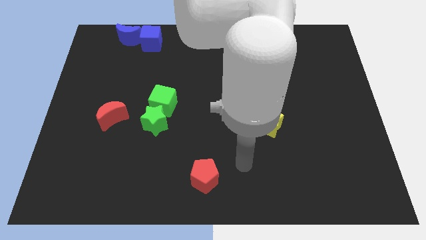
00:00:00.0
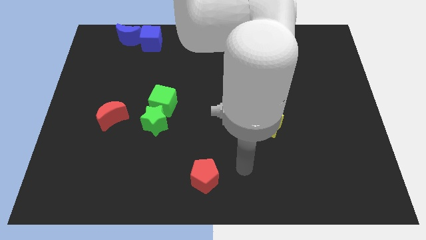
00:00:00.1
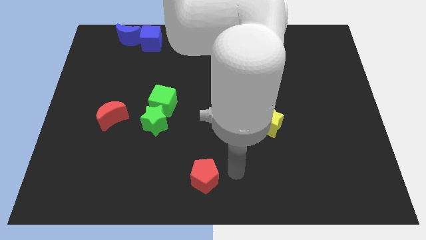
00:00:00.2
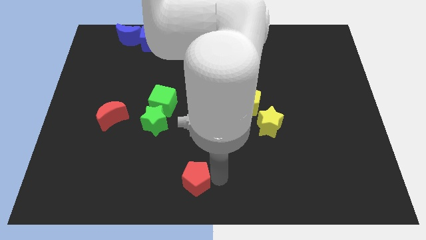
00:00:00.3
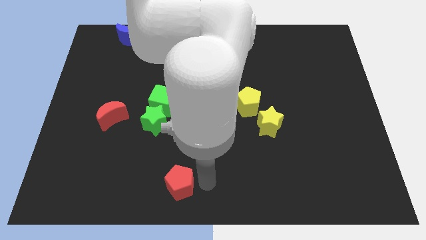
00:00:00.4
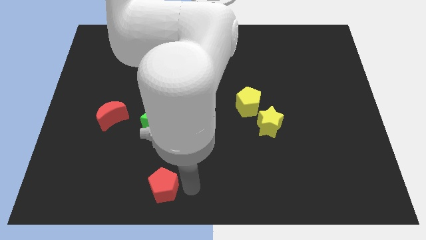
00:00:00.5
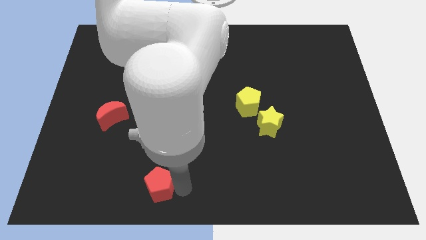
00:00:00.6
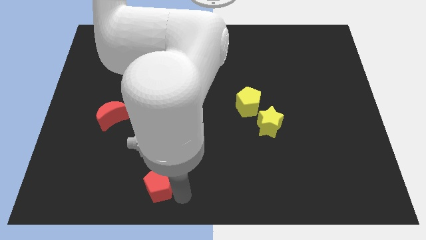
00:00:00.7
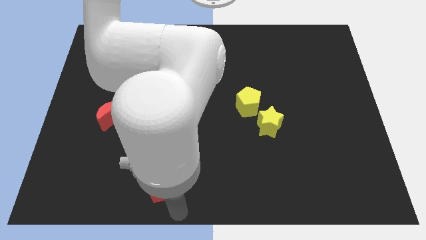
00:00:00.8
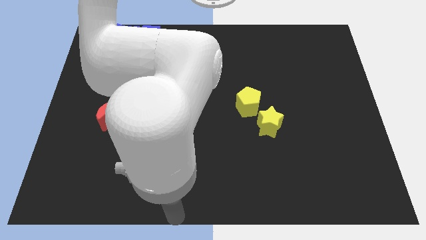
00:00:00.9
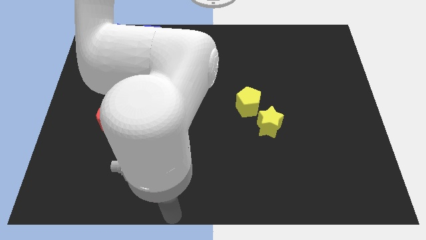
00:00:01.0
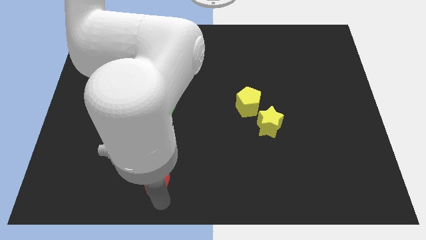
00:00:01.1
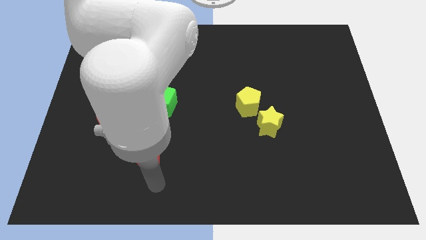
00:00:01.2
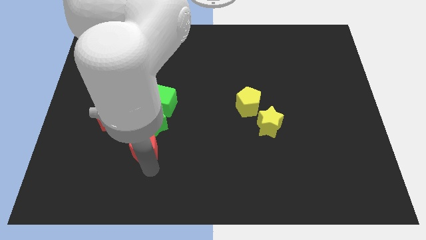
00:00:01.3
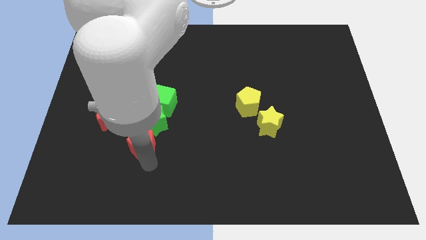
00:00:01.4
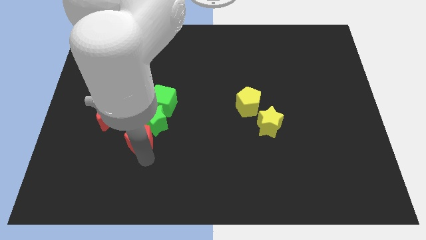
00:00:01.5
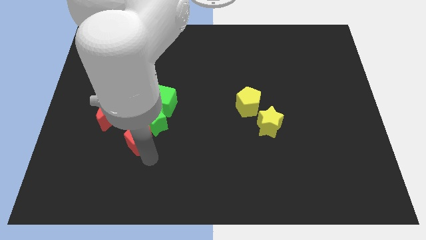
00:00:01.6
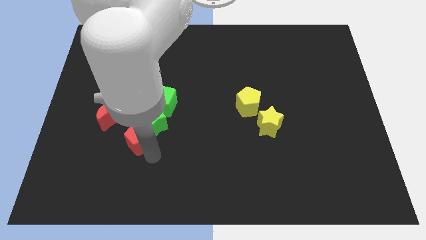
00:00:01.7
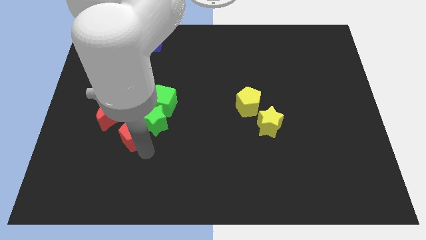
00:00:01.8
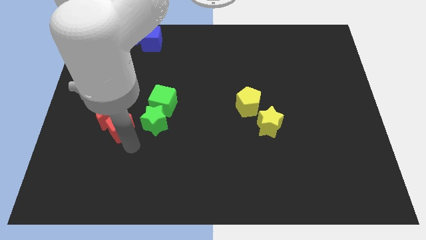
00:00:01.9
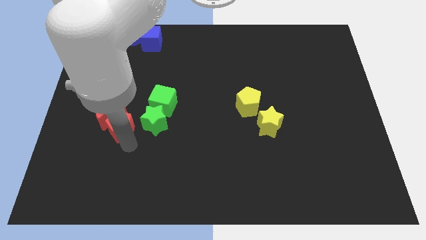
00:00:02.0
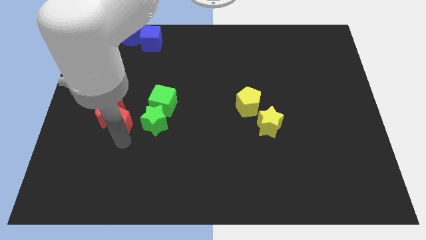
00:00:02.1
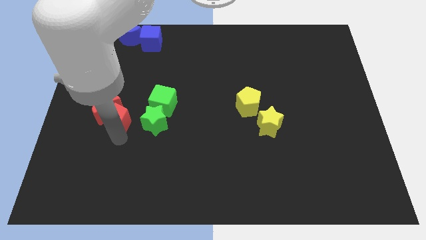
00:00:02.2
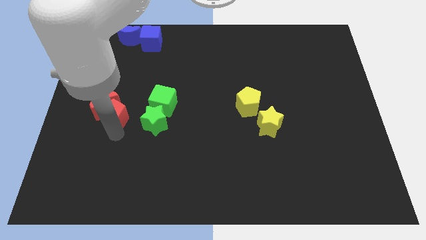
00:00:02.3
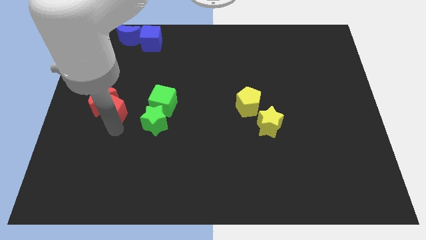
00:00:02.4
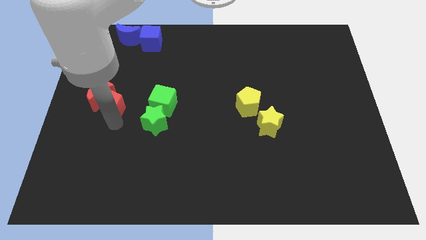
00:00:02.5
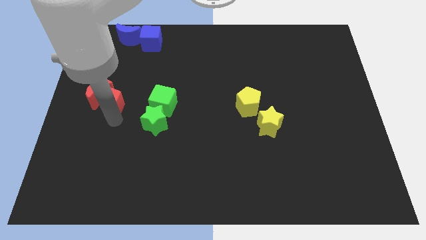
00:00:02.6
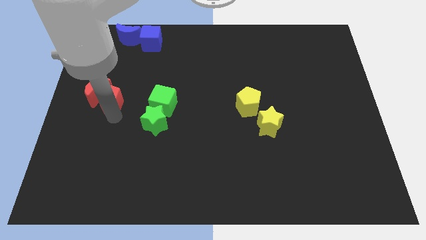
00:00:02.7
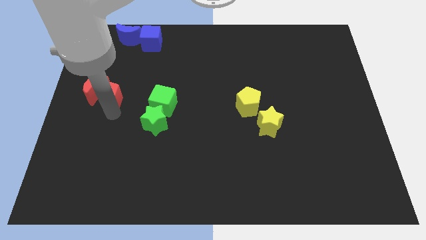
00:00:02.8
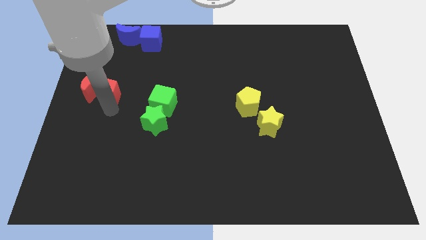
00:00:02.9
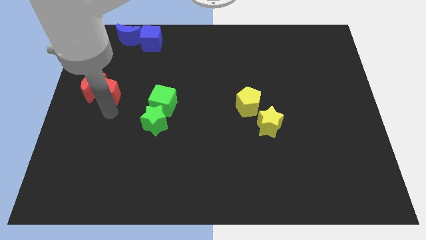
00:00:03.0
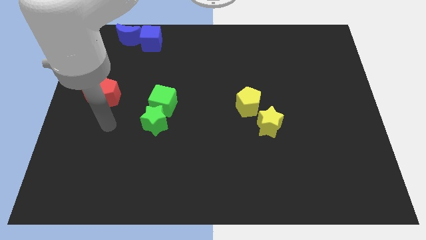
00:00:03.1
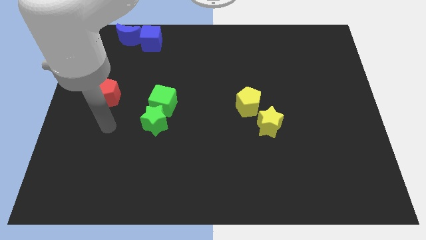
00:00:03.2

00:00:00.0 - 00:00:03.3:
push the red pentagon into the red moon

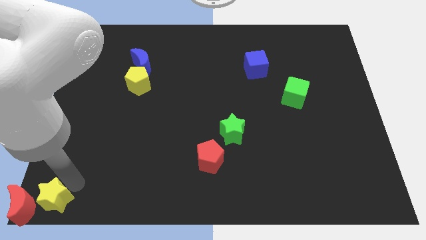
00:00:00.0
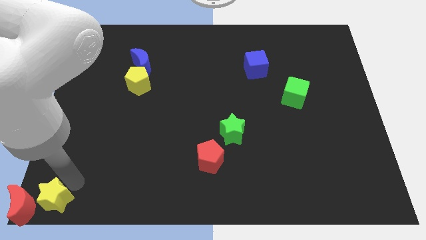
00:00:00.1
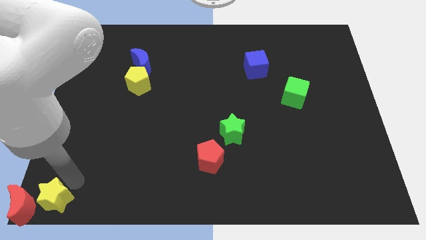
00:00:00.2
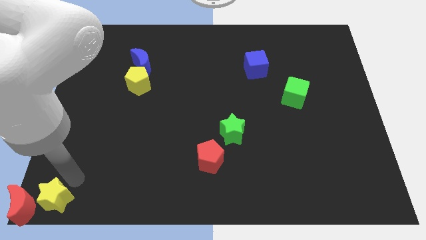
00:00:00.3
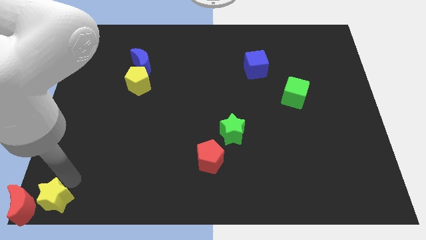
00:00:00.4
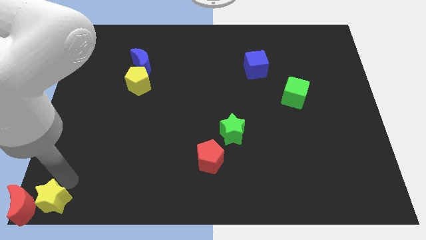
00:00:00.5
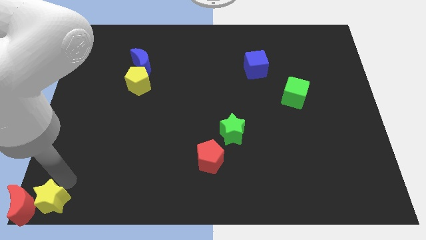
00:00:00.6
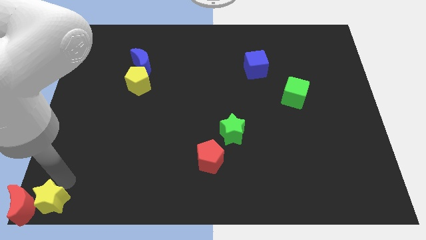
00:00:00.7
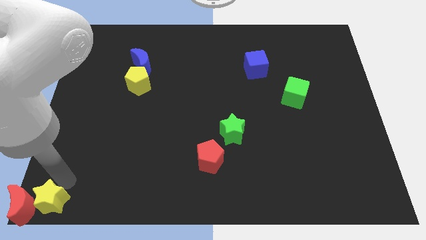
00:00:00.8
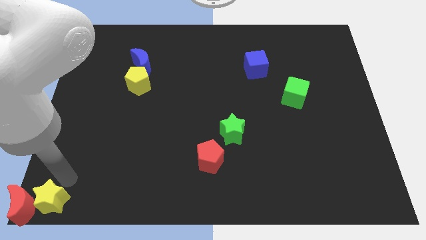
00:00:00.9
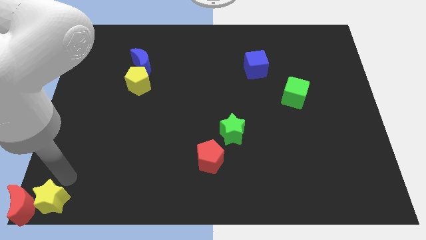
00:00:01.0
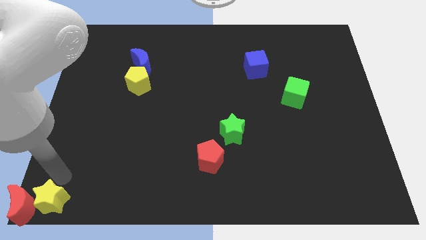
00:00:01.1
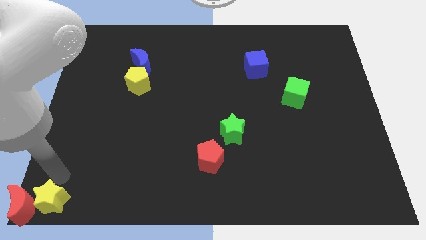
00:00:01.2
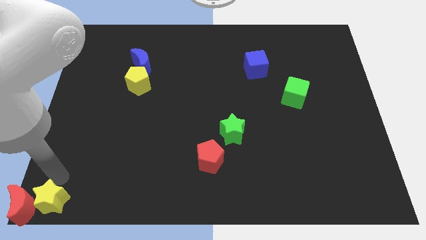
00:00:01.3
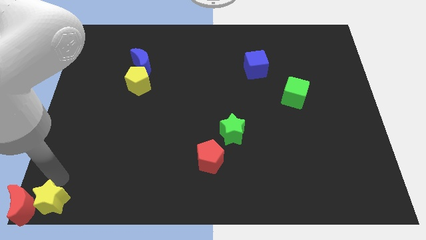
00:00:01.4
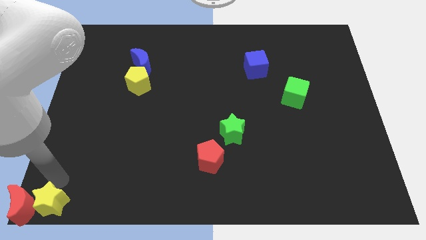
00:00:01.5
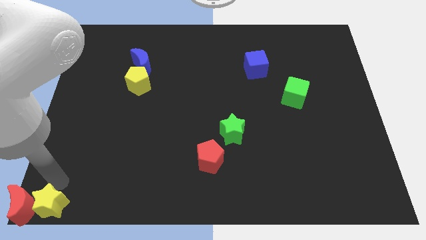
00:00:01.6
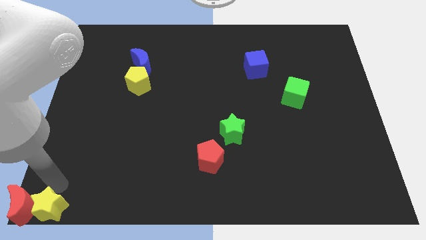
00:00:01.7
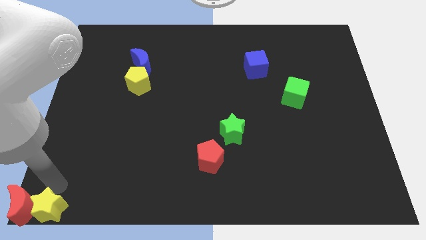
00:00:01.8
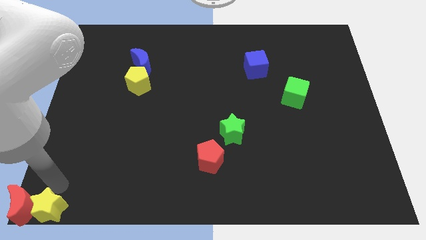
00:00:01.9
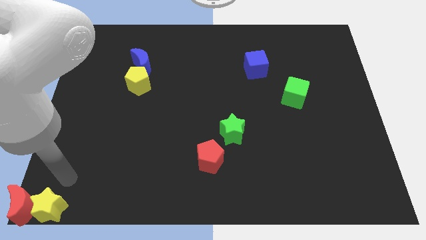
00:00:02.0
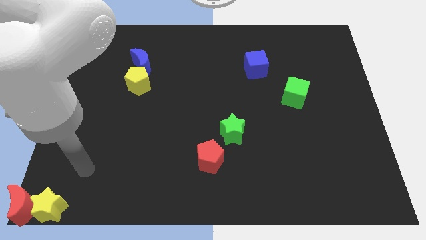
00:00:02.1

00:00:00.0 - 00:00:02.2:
slide the yellow star to the right side of the red crescent

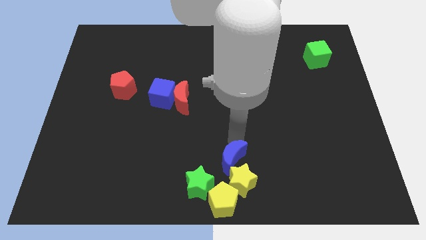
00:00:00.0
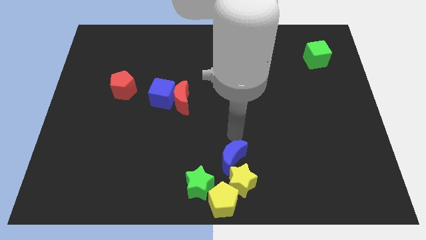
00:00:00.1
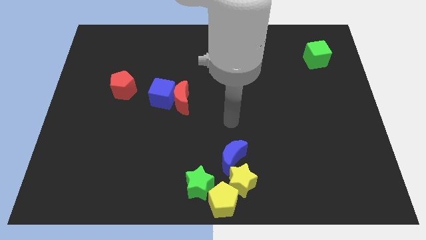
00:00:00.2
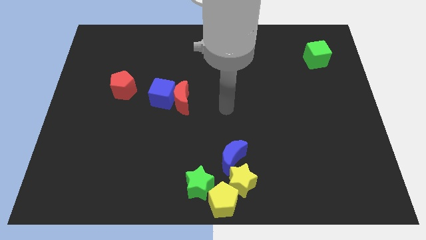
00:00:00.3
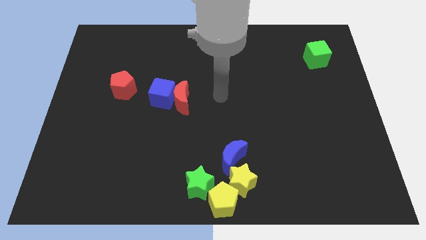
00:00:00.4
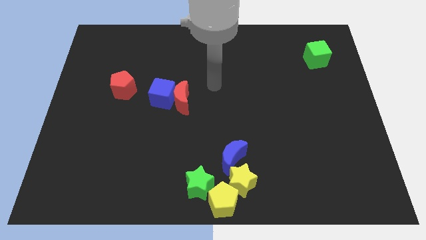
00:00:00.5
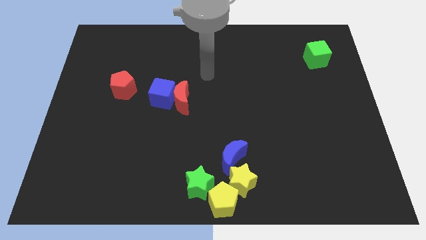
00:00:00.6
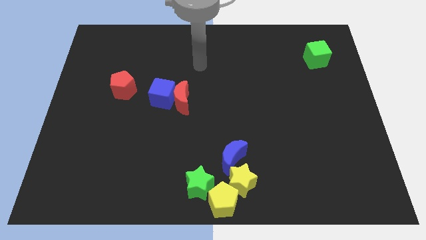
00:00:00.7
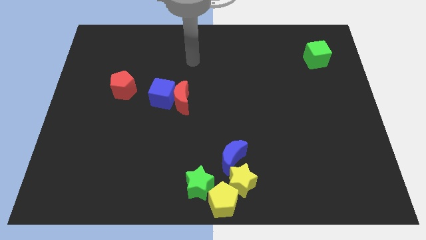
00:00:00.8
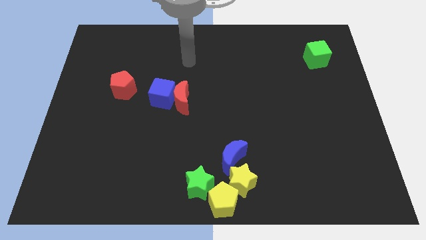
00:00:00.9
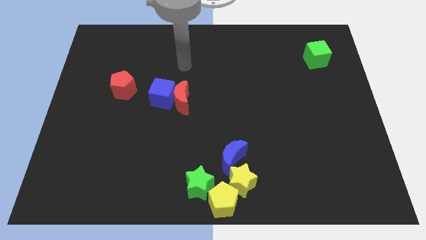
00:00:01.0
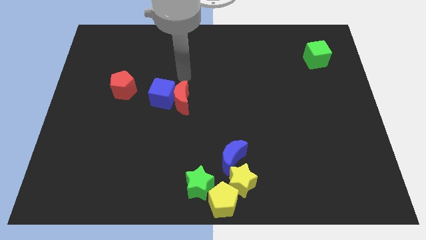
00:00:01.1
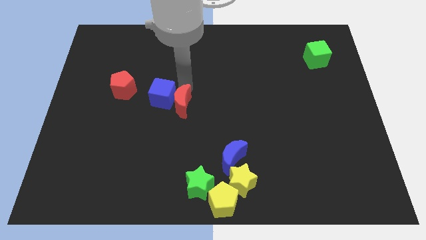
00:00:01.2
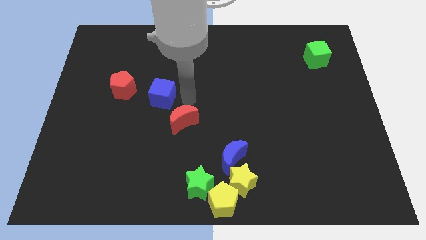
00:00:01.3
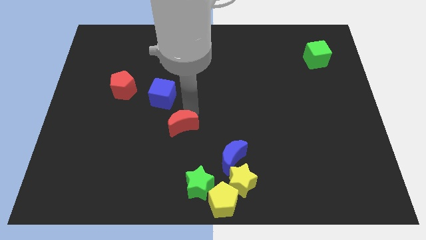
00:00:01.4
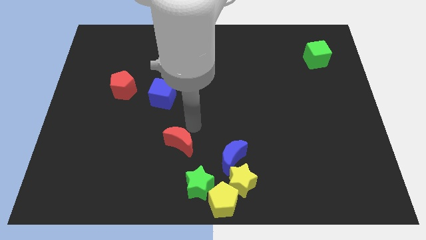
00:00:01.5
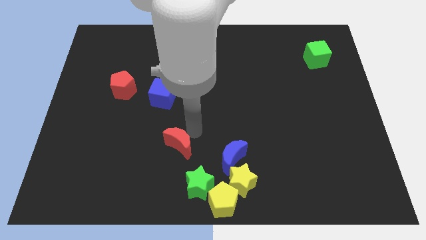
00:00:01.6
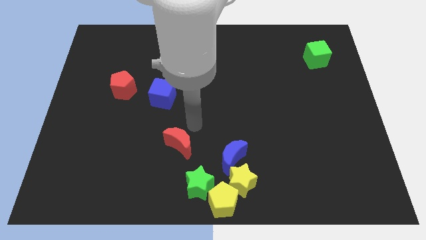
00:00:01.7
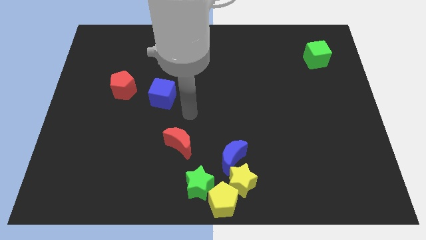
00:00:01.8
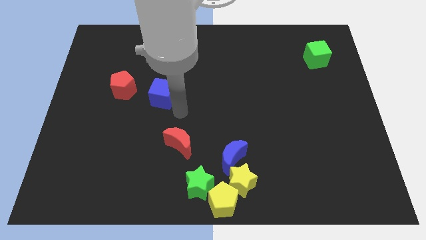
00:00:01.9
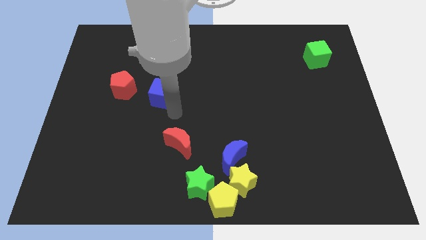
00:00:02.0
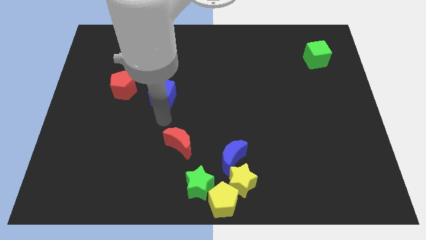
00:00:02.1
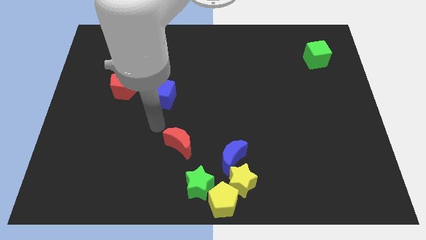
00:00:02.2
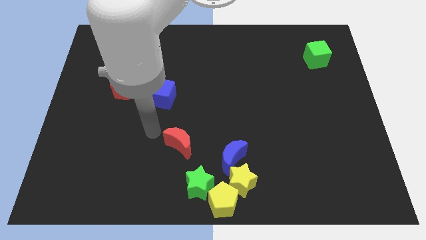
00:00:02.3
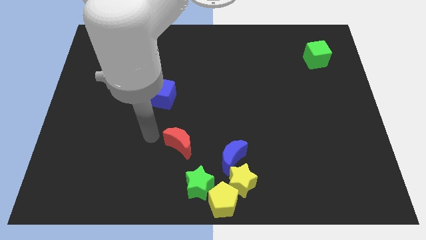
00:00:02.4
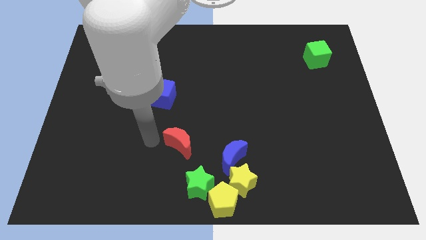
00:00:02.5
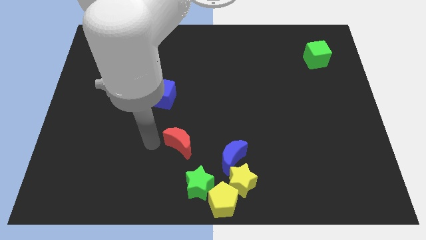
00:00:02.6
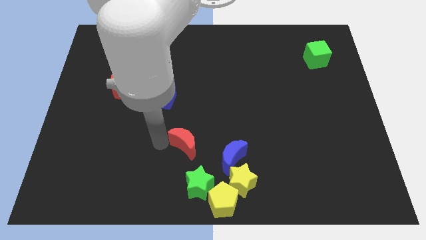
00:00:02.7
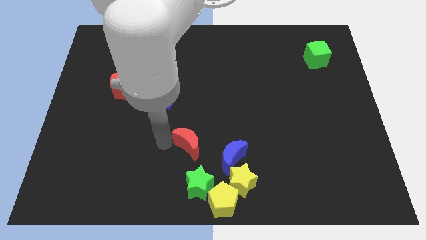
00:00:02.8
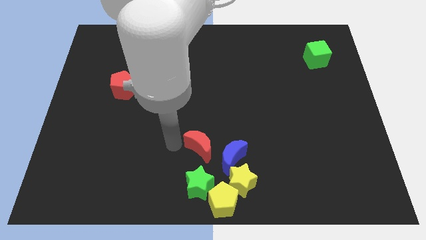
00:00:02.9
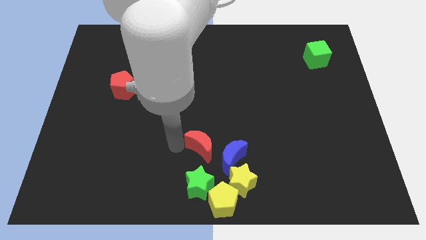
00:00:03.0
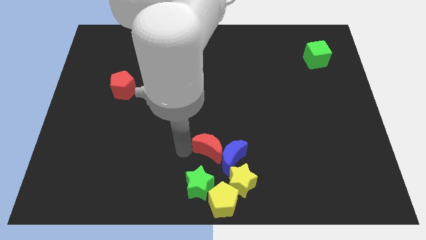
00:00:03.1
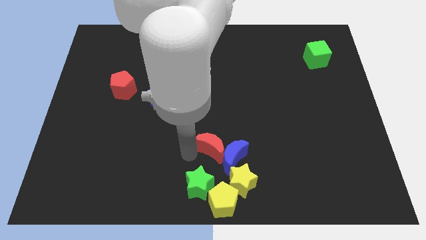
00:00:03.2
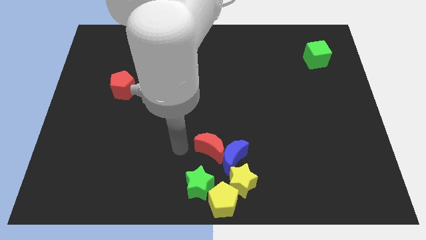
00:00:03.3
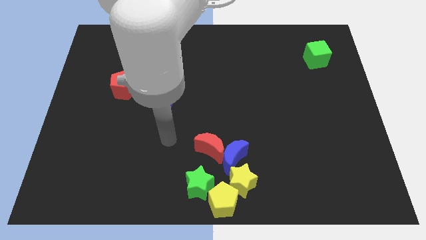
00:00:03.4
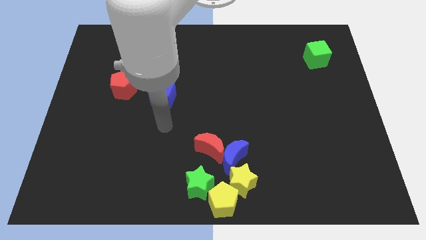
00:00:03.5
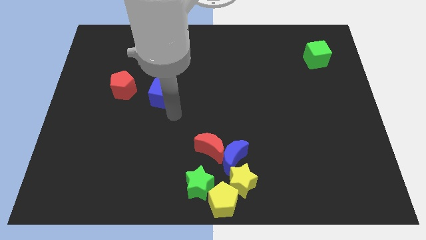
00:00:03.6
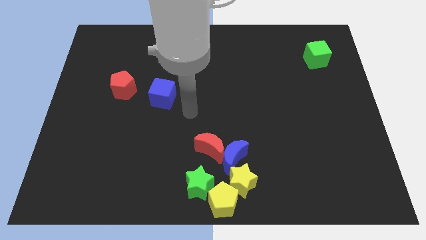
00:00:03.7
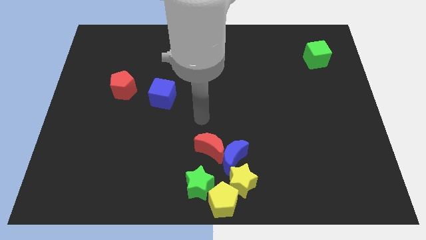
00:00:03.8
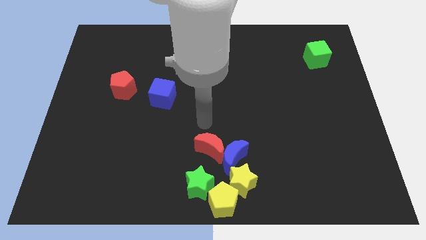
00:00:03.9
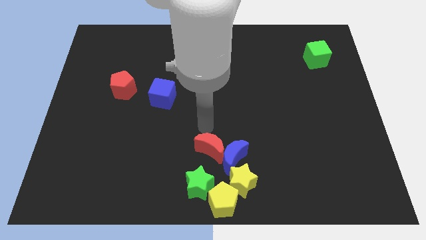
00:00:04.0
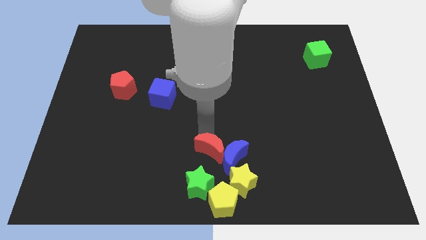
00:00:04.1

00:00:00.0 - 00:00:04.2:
move the red crescent into the blue crescent
